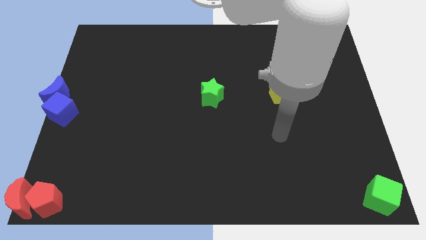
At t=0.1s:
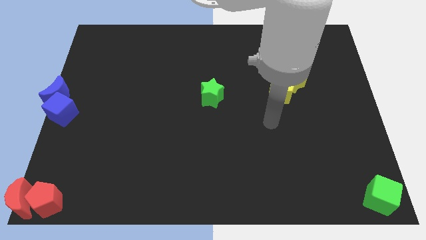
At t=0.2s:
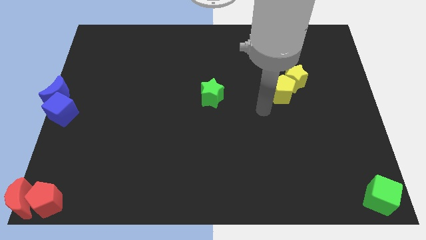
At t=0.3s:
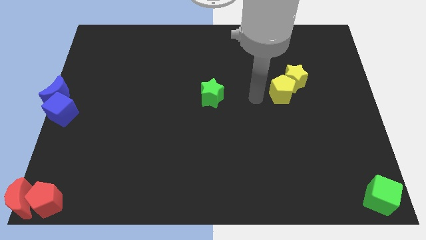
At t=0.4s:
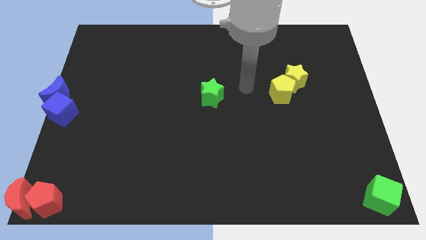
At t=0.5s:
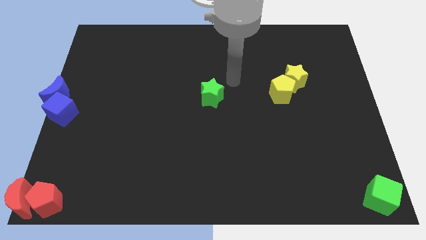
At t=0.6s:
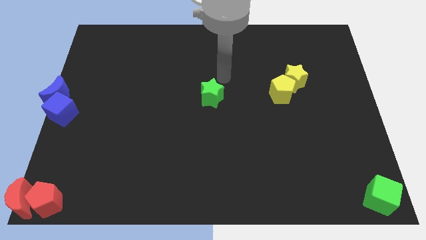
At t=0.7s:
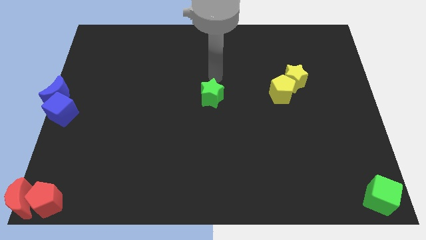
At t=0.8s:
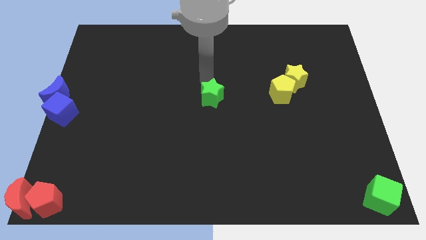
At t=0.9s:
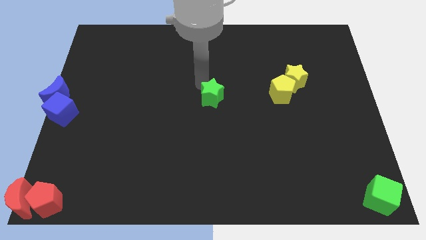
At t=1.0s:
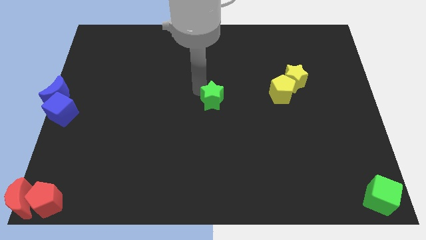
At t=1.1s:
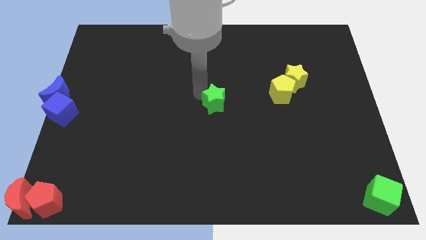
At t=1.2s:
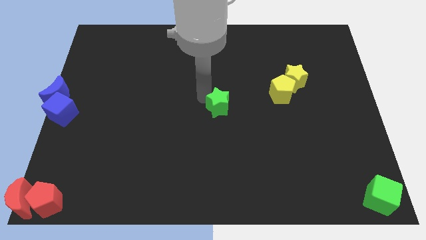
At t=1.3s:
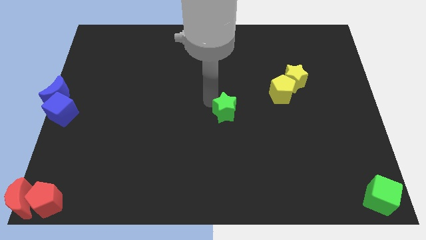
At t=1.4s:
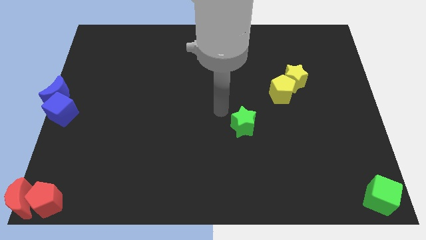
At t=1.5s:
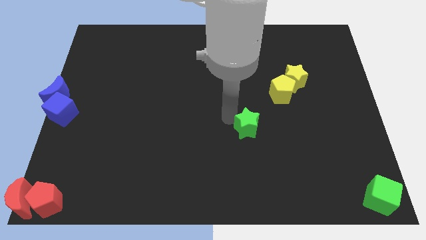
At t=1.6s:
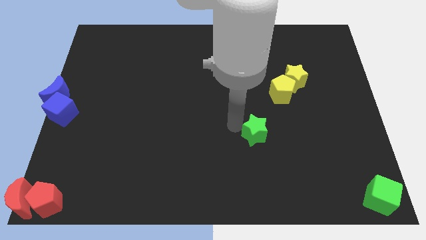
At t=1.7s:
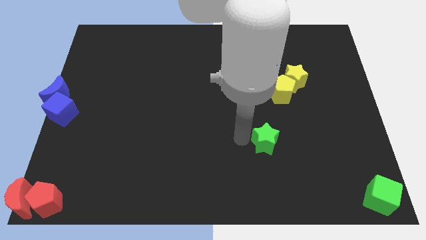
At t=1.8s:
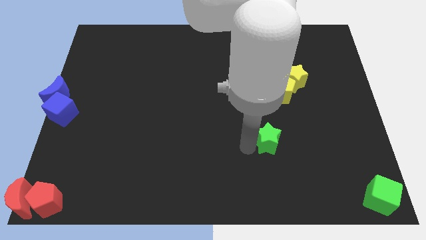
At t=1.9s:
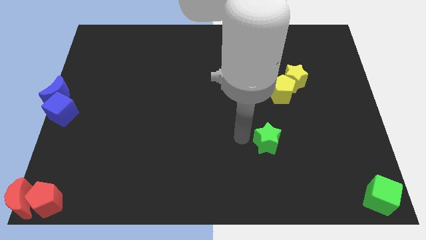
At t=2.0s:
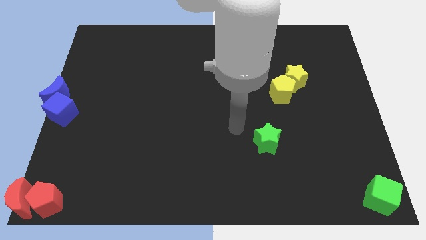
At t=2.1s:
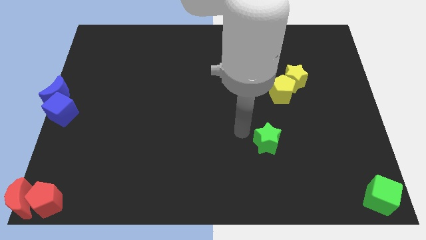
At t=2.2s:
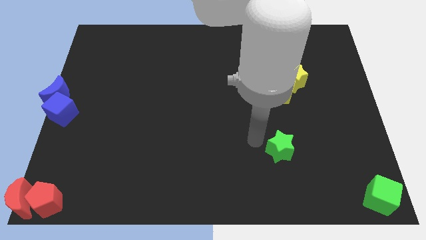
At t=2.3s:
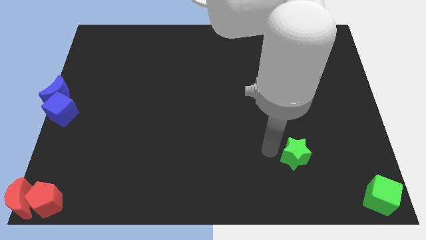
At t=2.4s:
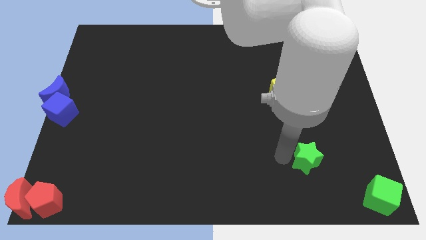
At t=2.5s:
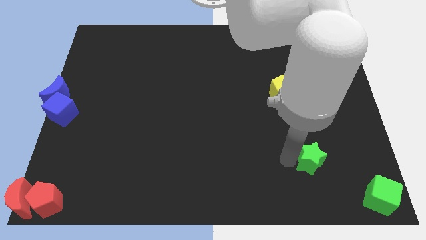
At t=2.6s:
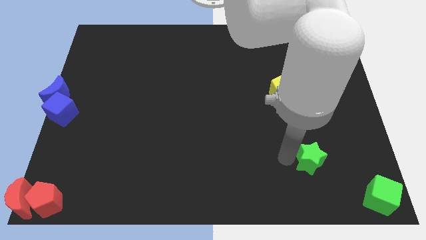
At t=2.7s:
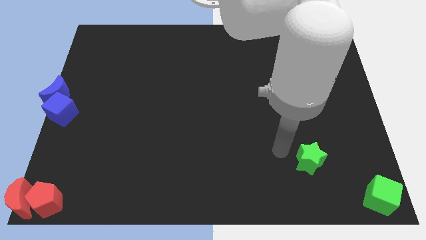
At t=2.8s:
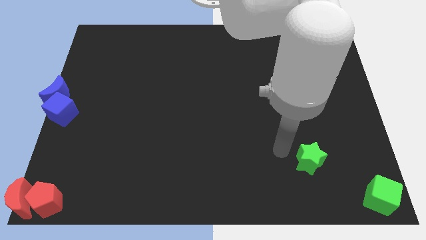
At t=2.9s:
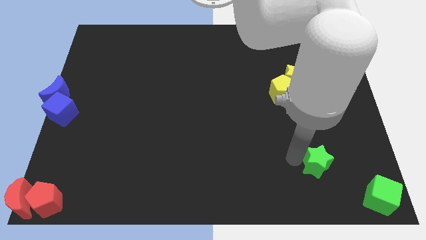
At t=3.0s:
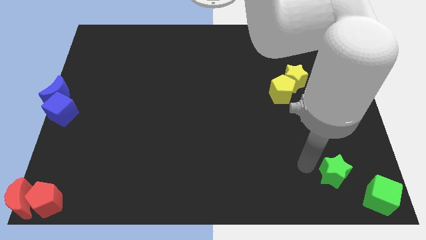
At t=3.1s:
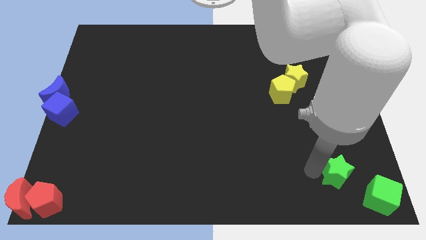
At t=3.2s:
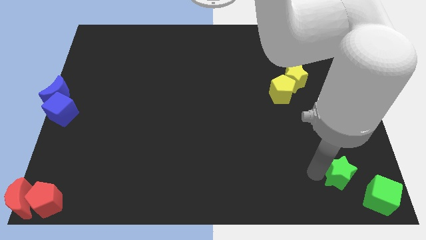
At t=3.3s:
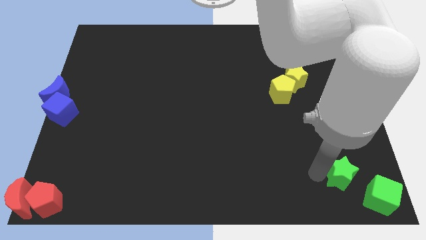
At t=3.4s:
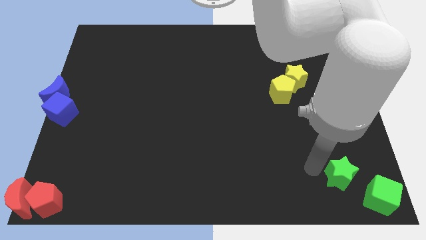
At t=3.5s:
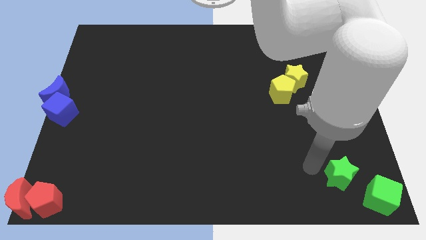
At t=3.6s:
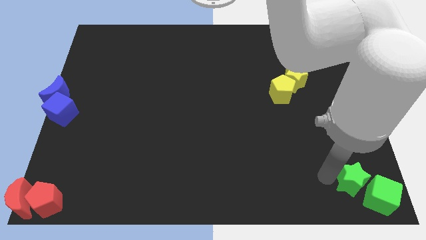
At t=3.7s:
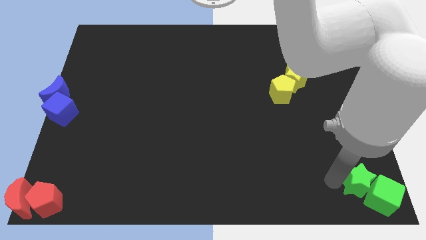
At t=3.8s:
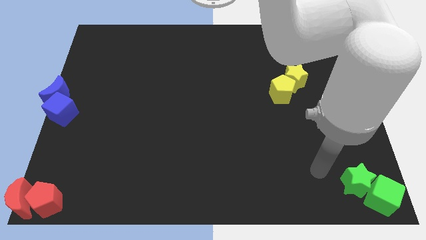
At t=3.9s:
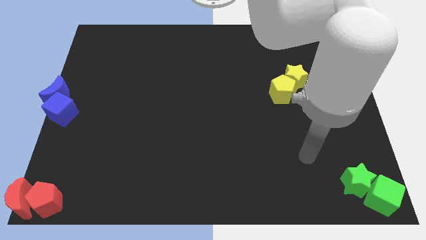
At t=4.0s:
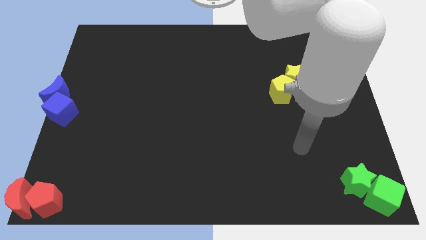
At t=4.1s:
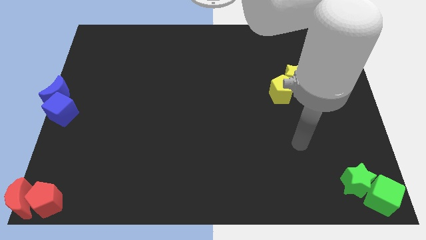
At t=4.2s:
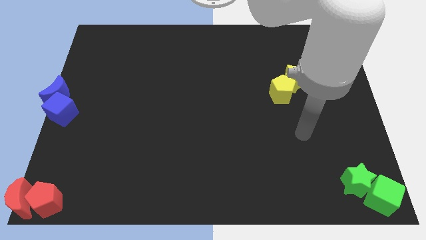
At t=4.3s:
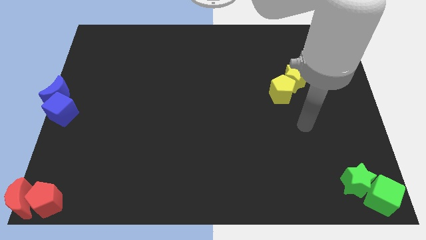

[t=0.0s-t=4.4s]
push the green star into the green cube

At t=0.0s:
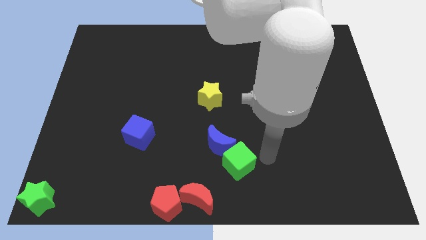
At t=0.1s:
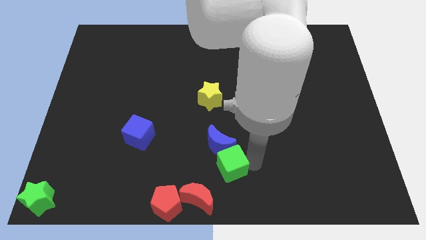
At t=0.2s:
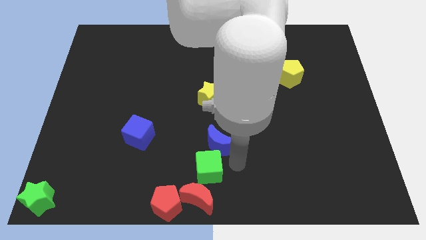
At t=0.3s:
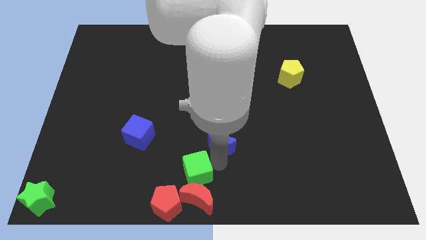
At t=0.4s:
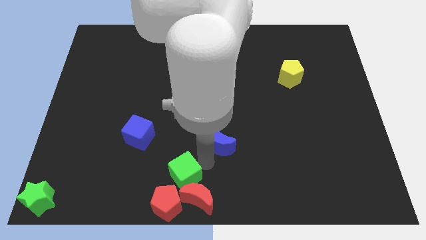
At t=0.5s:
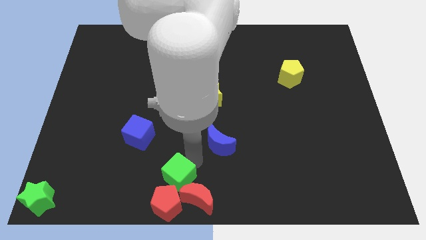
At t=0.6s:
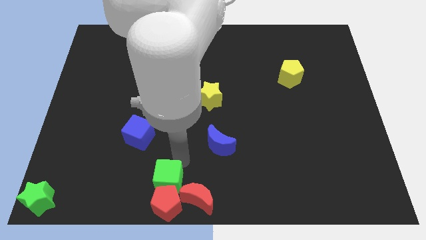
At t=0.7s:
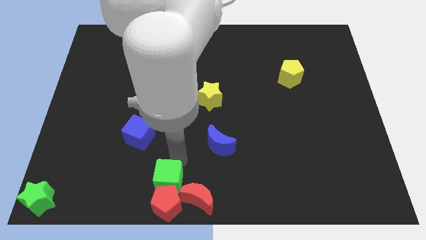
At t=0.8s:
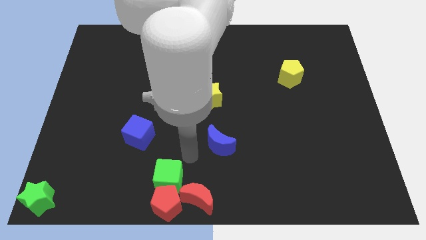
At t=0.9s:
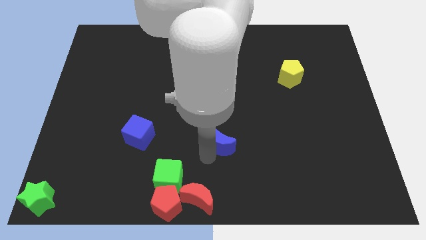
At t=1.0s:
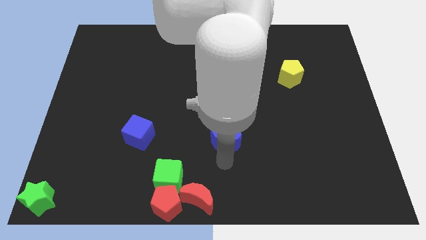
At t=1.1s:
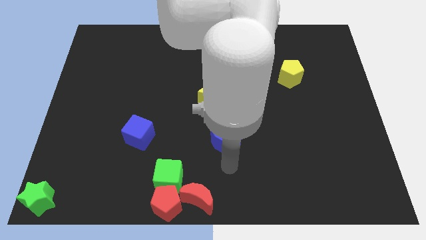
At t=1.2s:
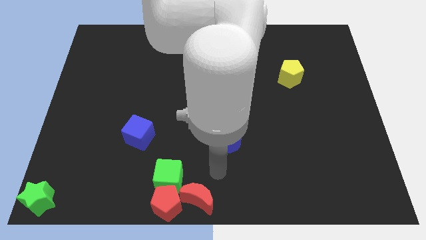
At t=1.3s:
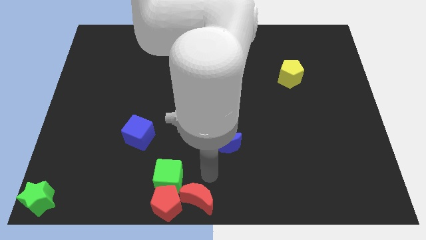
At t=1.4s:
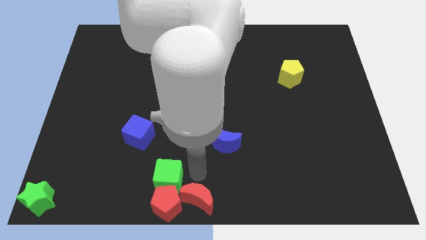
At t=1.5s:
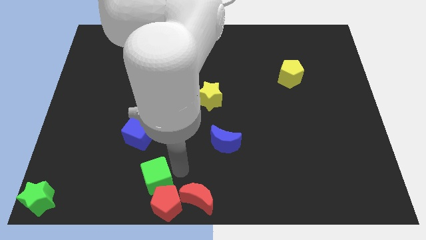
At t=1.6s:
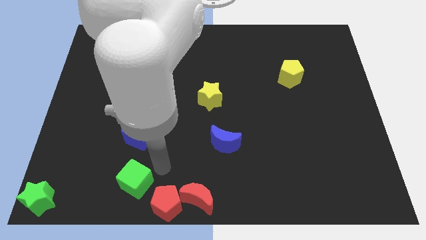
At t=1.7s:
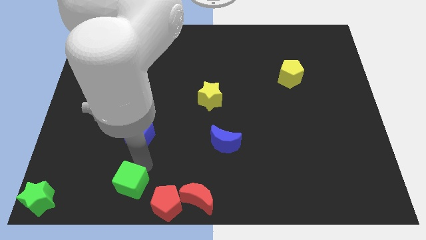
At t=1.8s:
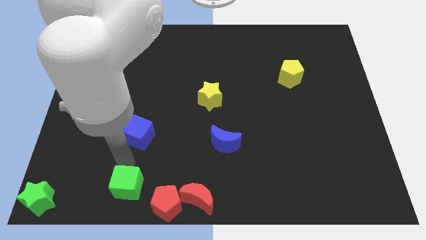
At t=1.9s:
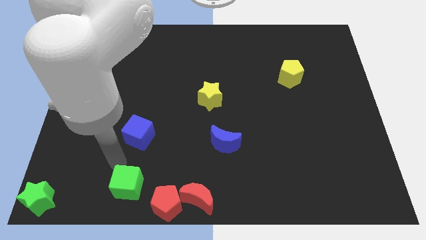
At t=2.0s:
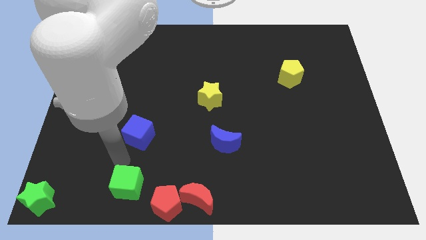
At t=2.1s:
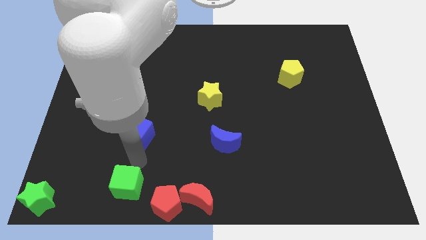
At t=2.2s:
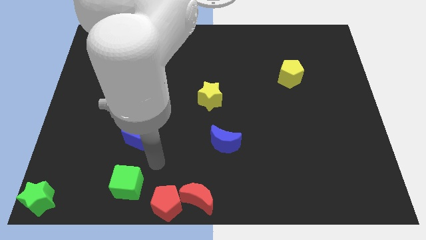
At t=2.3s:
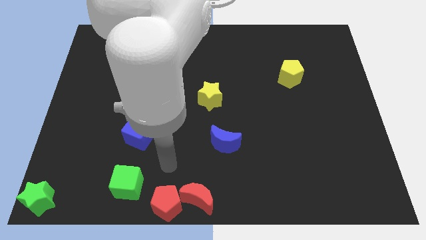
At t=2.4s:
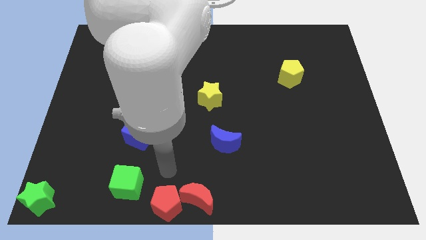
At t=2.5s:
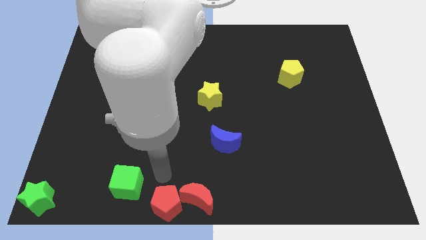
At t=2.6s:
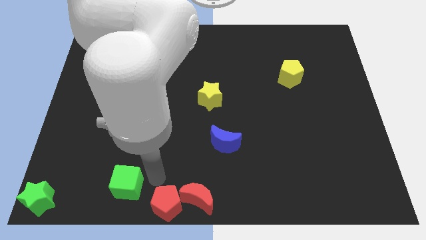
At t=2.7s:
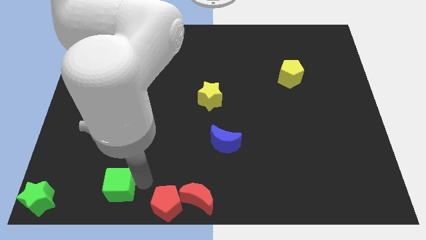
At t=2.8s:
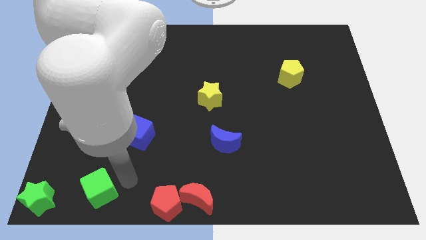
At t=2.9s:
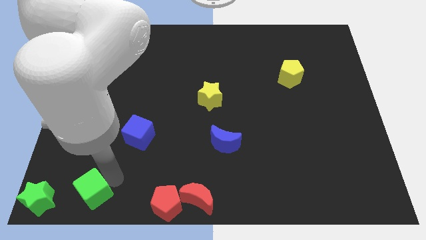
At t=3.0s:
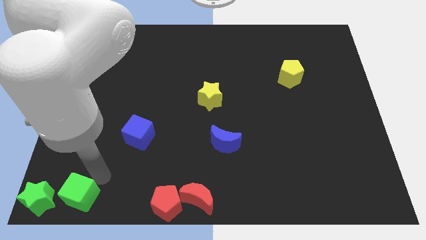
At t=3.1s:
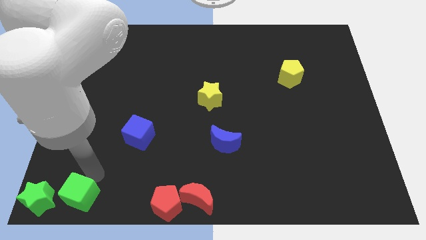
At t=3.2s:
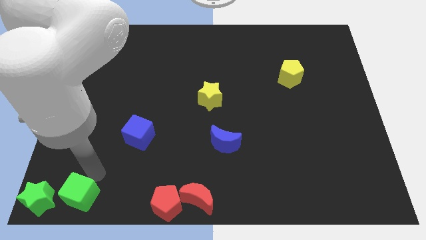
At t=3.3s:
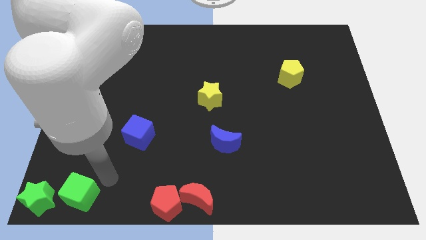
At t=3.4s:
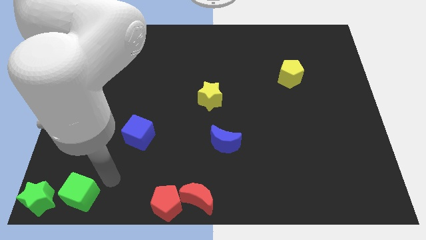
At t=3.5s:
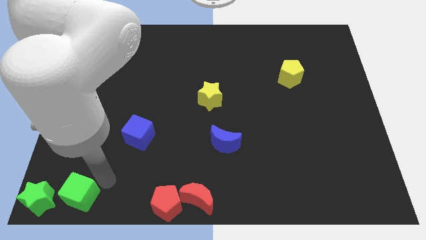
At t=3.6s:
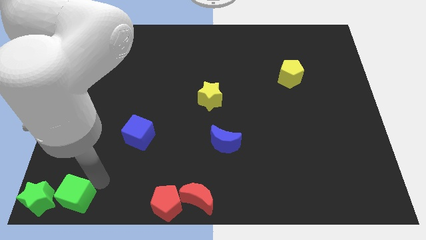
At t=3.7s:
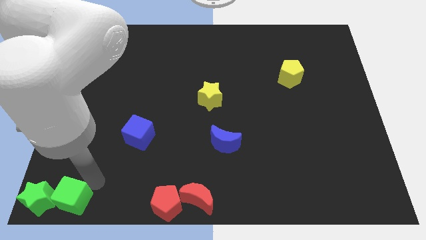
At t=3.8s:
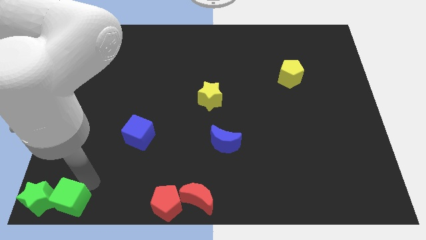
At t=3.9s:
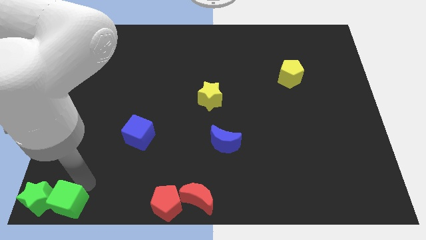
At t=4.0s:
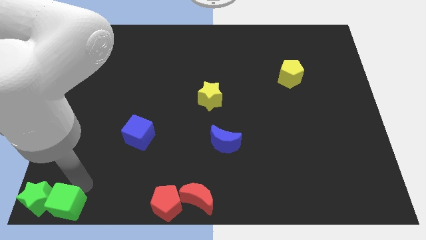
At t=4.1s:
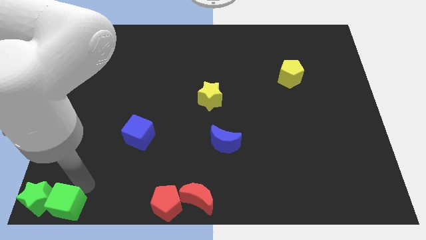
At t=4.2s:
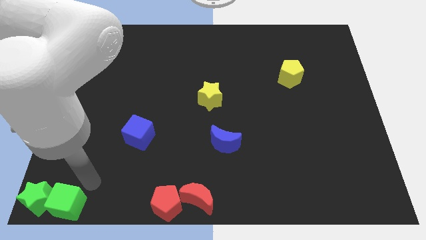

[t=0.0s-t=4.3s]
move the green cube to the right into green star
